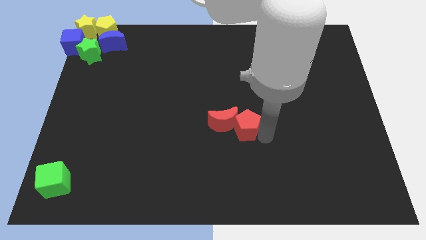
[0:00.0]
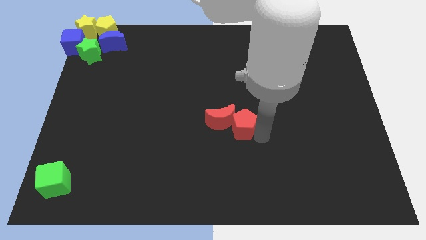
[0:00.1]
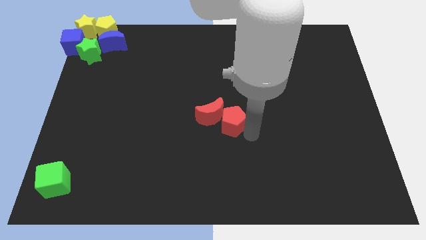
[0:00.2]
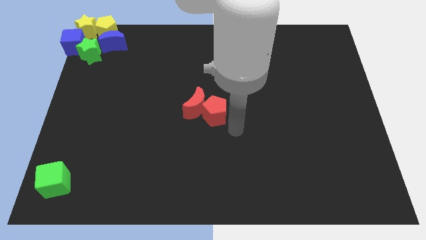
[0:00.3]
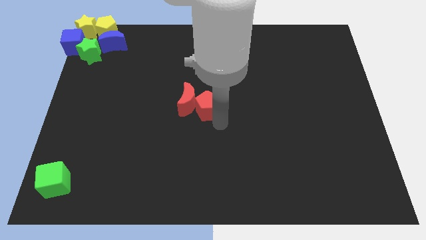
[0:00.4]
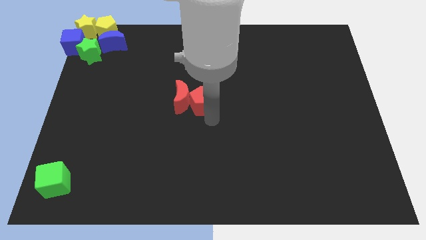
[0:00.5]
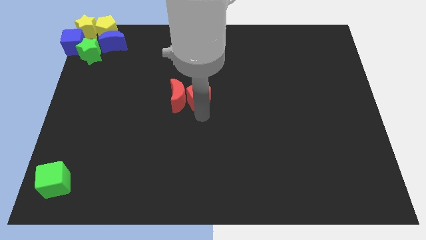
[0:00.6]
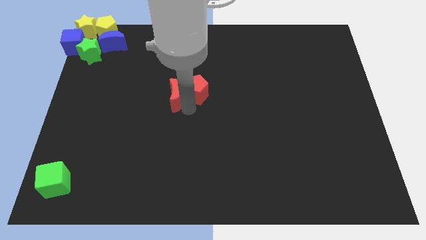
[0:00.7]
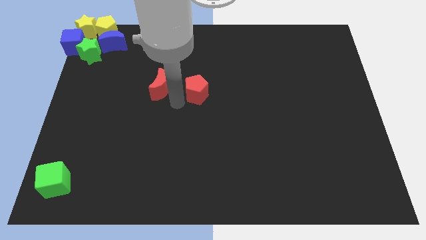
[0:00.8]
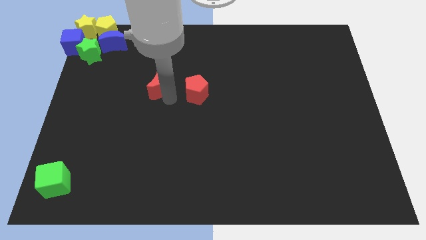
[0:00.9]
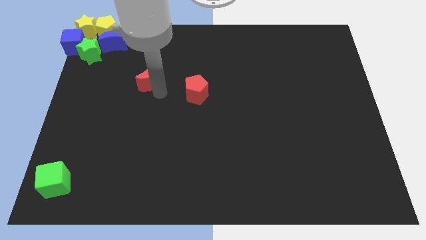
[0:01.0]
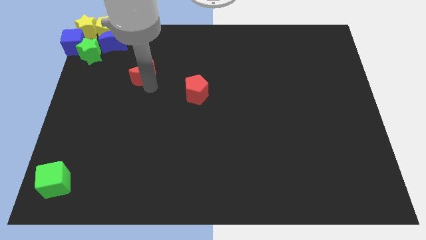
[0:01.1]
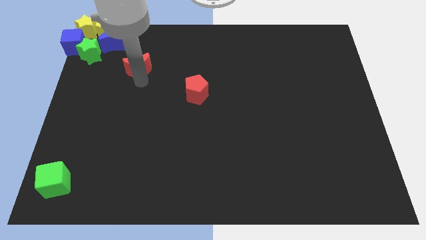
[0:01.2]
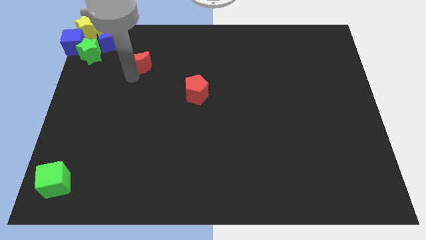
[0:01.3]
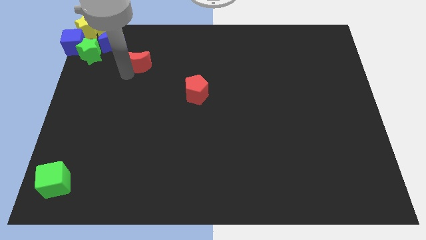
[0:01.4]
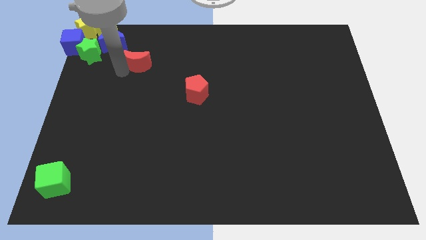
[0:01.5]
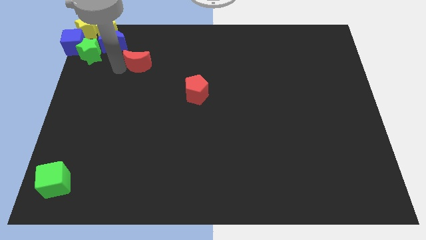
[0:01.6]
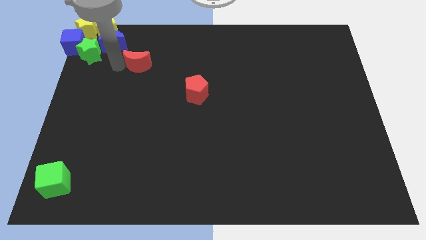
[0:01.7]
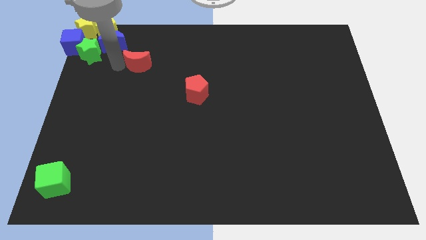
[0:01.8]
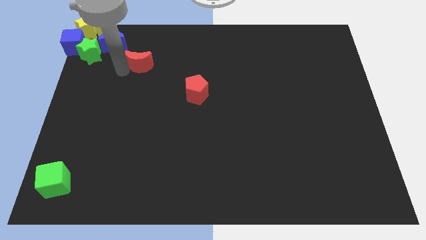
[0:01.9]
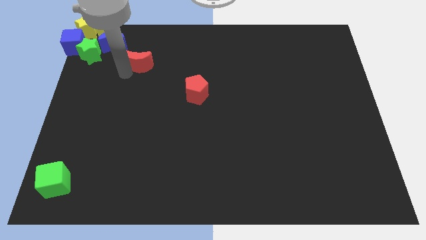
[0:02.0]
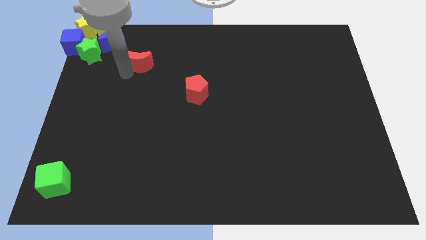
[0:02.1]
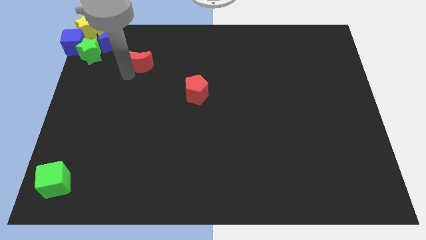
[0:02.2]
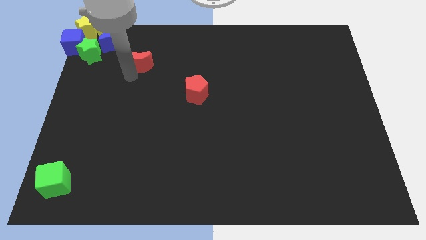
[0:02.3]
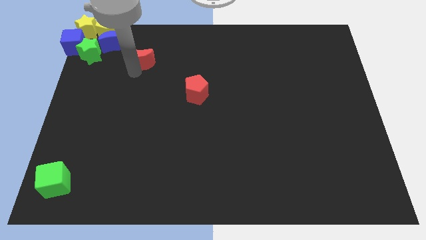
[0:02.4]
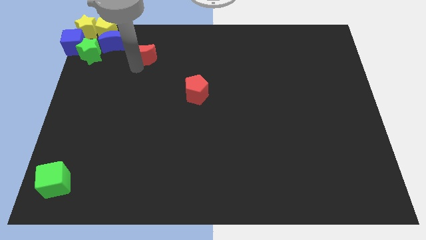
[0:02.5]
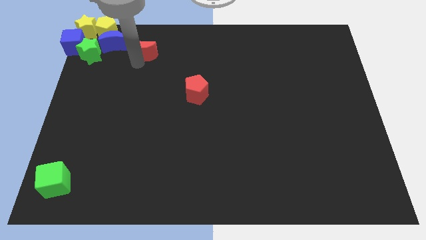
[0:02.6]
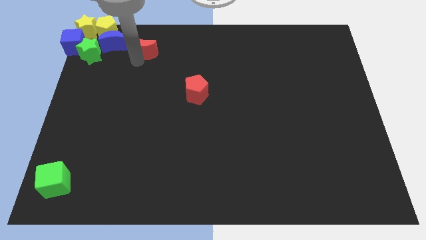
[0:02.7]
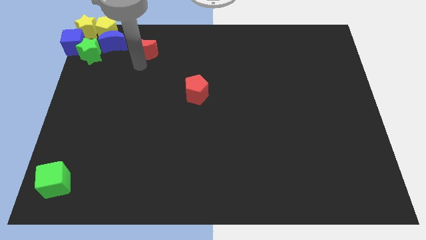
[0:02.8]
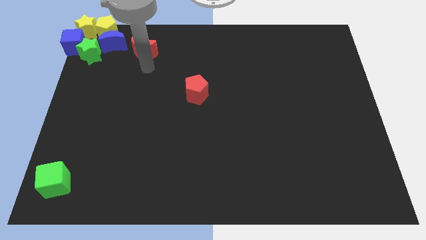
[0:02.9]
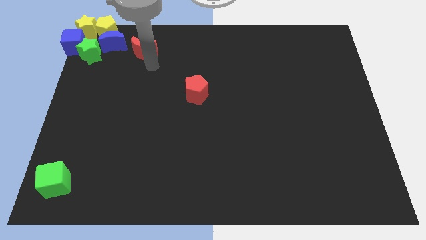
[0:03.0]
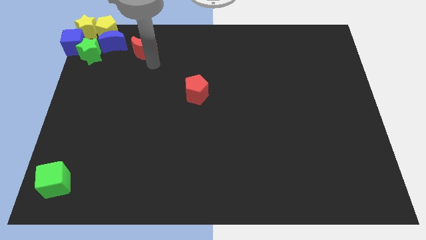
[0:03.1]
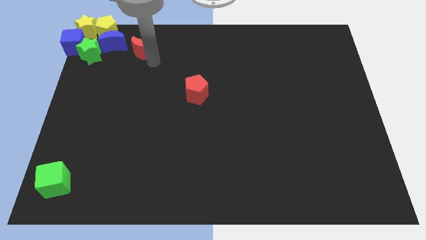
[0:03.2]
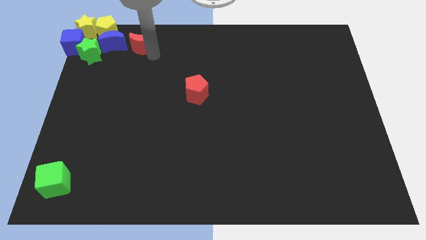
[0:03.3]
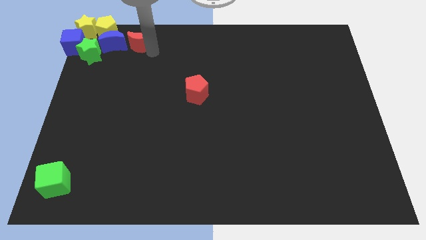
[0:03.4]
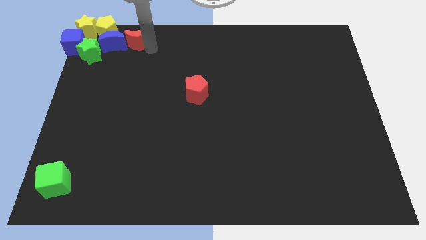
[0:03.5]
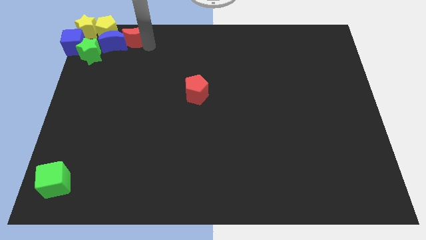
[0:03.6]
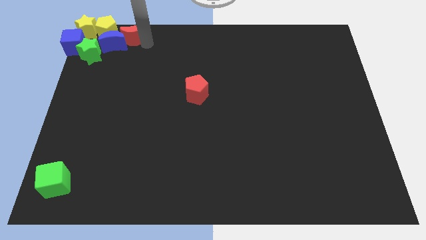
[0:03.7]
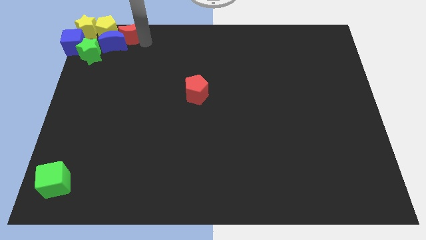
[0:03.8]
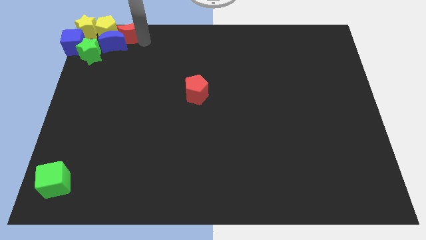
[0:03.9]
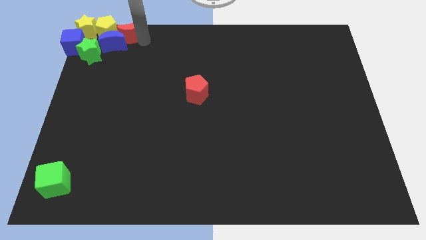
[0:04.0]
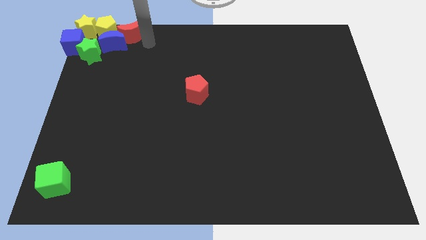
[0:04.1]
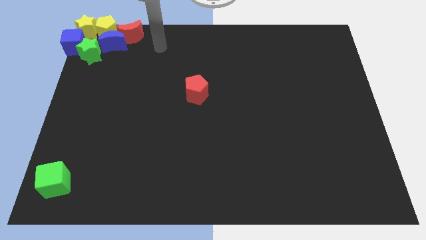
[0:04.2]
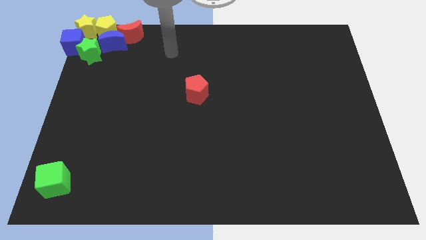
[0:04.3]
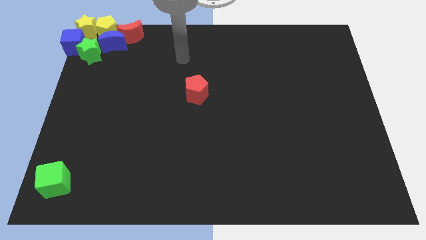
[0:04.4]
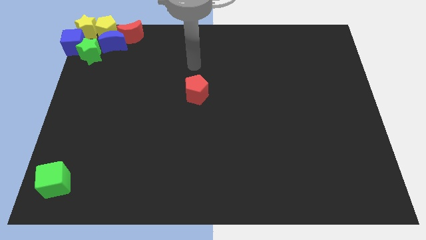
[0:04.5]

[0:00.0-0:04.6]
move the red moon to the right of the yellow pentagon

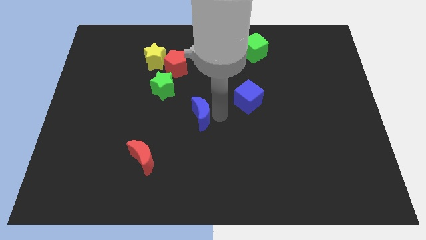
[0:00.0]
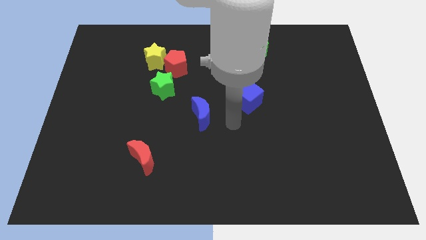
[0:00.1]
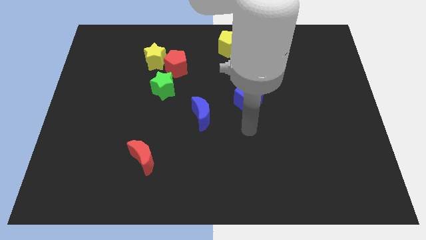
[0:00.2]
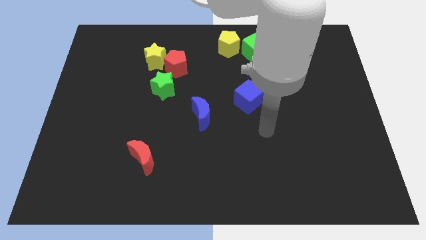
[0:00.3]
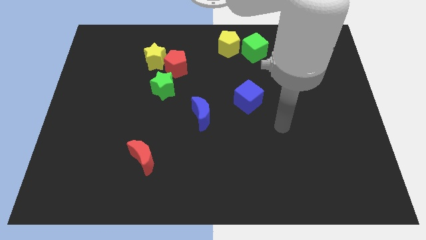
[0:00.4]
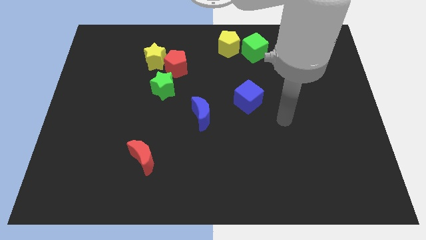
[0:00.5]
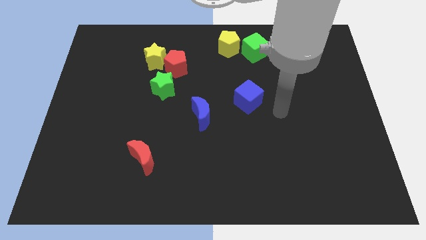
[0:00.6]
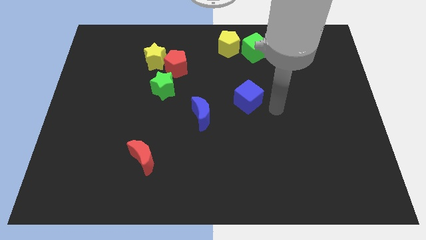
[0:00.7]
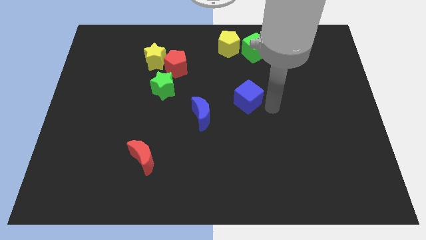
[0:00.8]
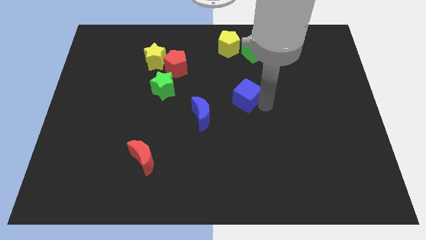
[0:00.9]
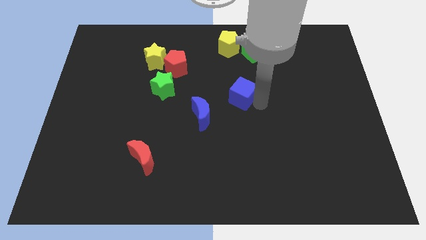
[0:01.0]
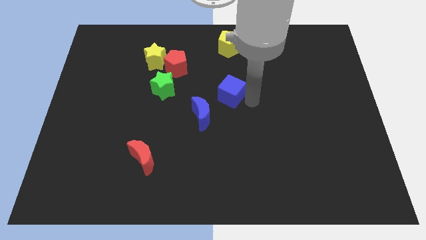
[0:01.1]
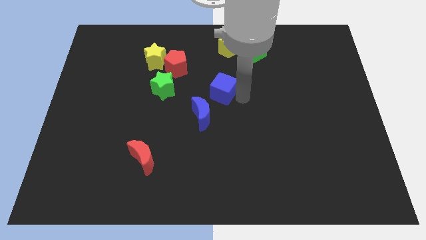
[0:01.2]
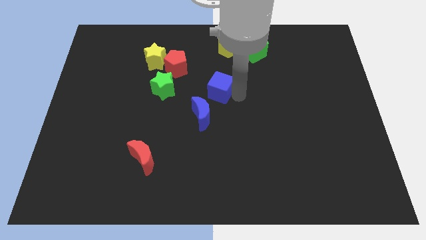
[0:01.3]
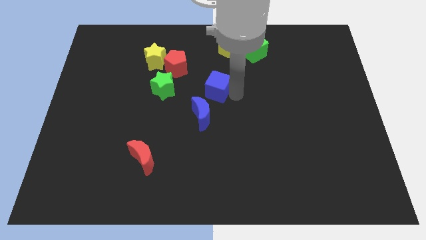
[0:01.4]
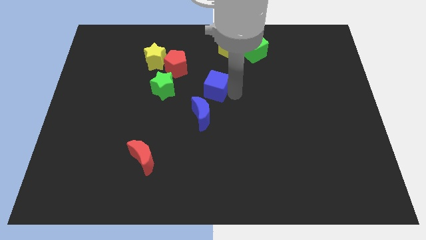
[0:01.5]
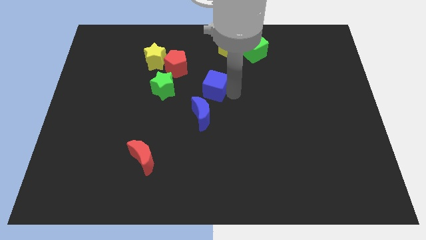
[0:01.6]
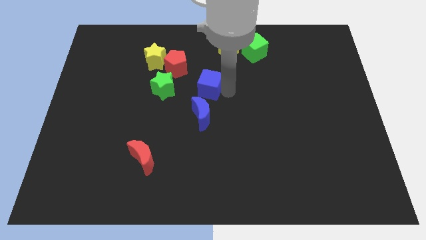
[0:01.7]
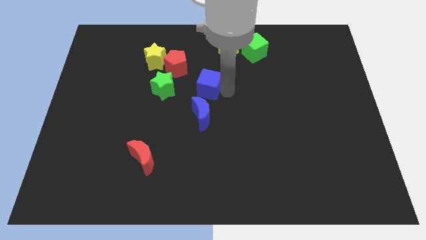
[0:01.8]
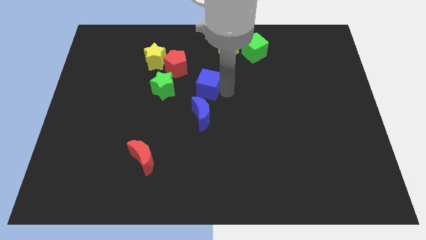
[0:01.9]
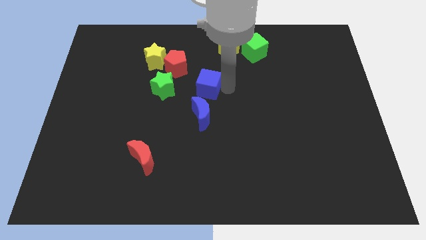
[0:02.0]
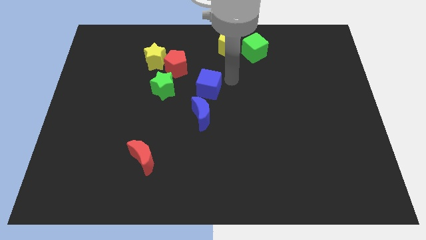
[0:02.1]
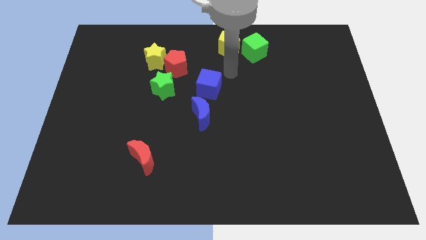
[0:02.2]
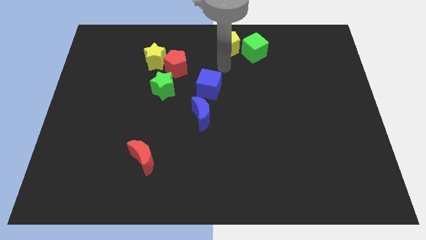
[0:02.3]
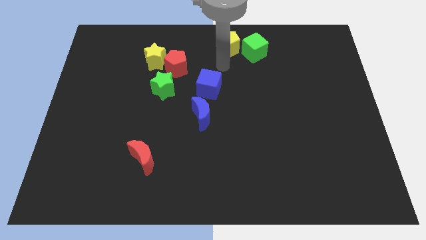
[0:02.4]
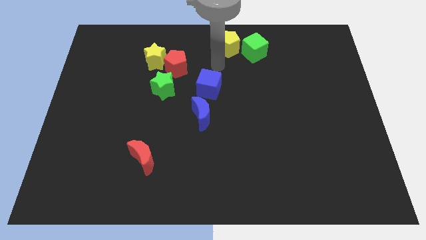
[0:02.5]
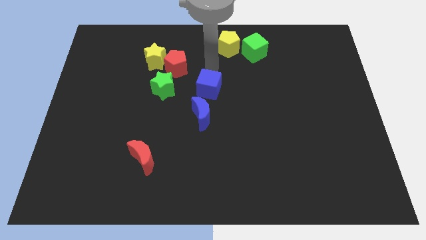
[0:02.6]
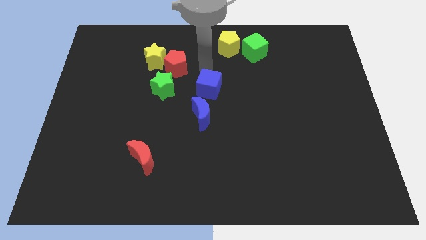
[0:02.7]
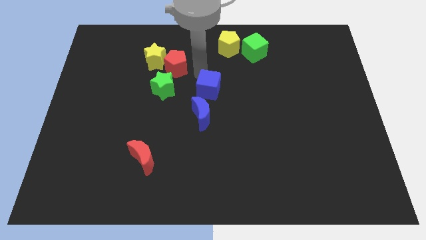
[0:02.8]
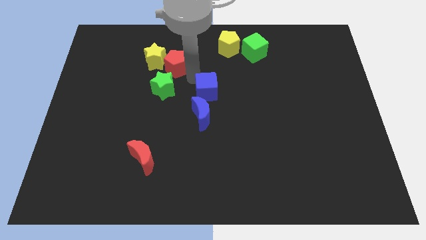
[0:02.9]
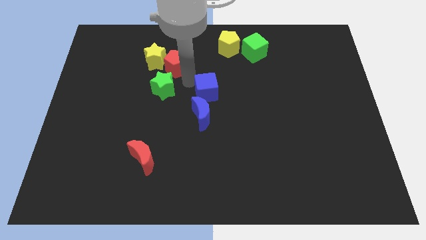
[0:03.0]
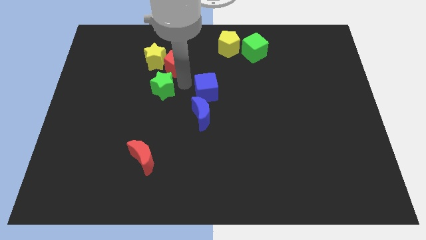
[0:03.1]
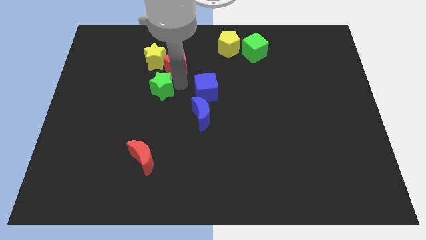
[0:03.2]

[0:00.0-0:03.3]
push the blue cube to the bottom of the blue crescent

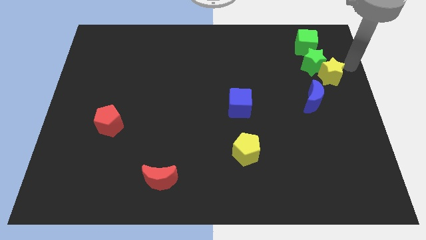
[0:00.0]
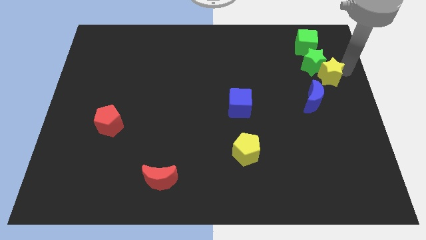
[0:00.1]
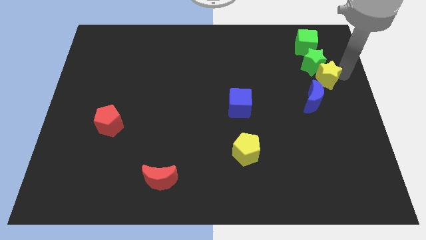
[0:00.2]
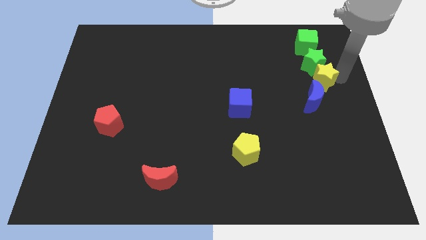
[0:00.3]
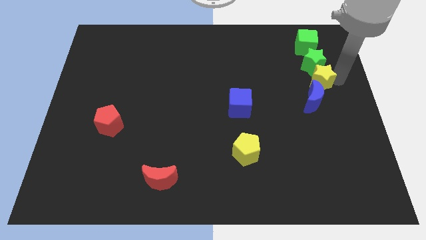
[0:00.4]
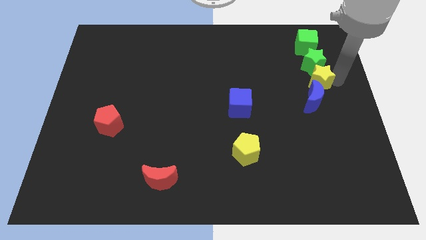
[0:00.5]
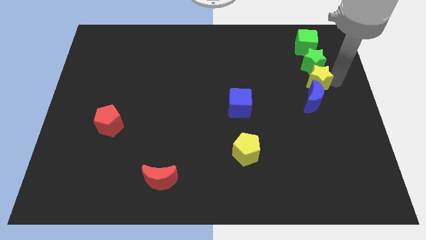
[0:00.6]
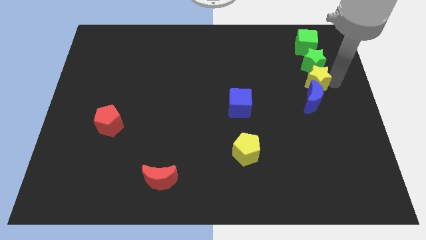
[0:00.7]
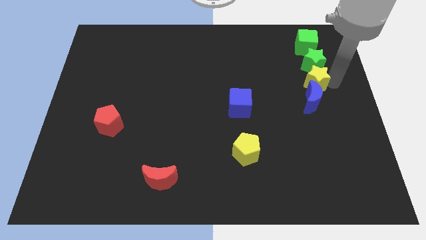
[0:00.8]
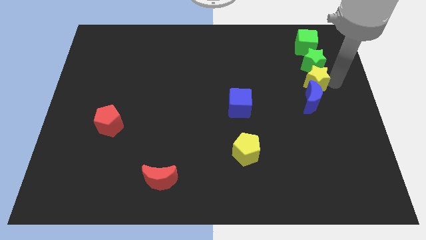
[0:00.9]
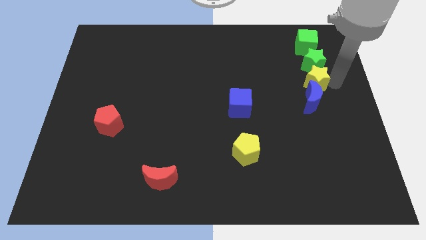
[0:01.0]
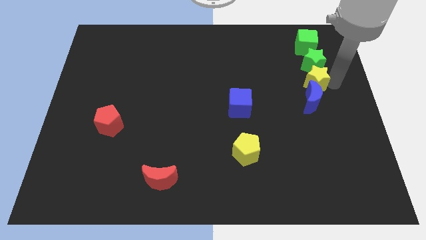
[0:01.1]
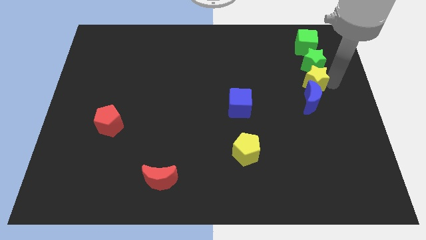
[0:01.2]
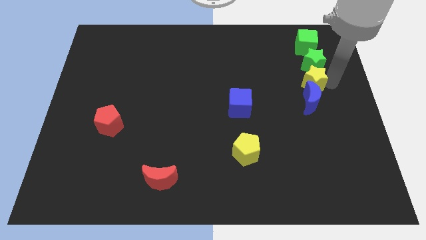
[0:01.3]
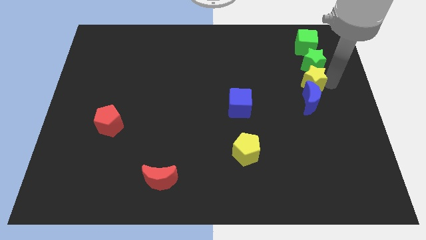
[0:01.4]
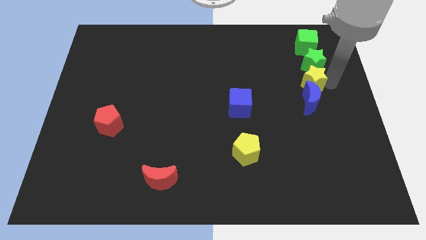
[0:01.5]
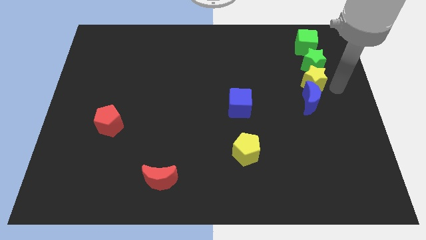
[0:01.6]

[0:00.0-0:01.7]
push the yellow star between the green star and blue moon
